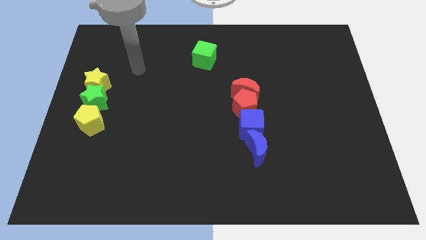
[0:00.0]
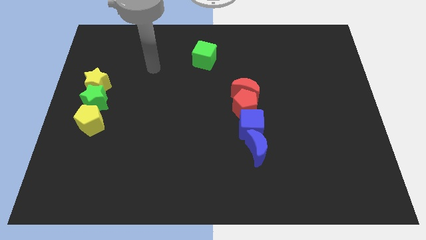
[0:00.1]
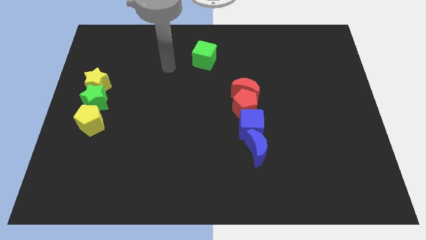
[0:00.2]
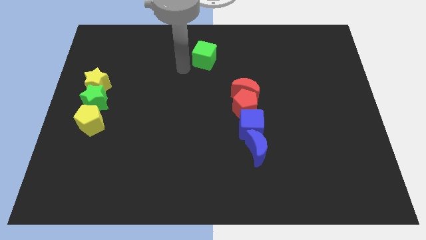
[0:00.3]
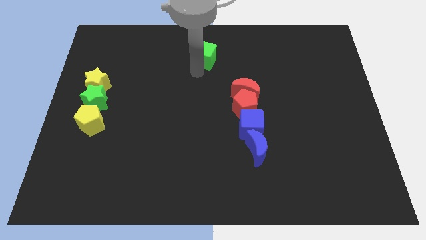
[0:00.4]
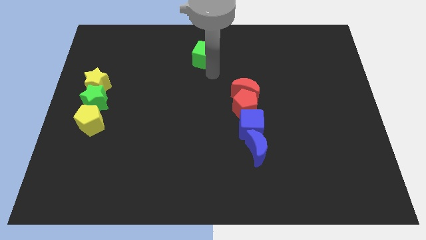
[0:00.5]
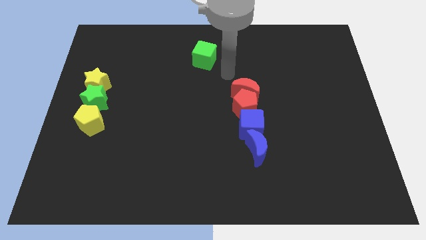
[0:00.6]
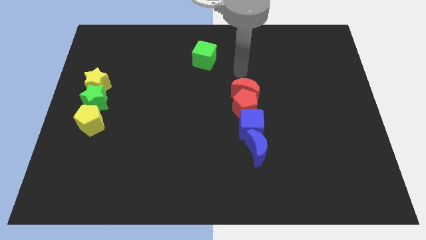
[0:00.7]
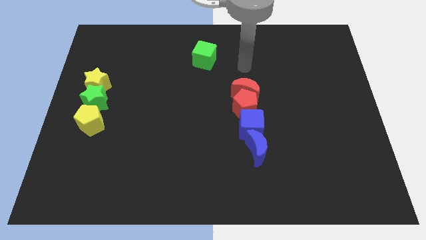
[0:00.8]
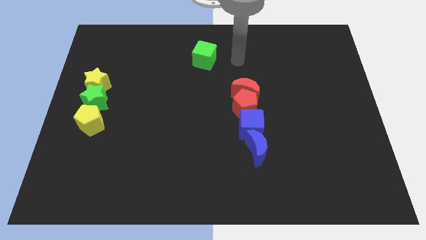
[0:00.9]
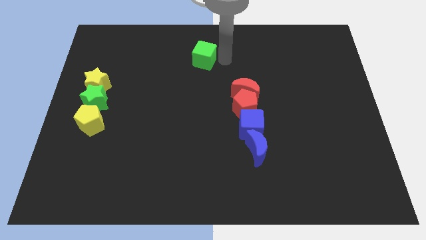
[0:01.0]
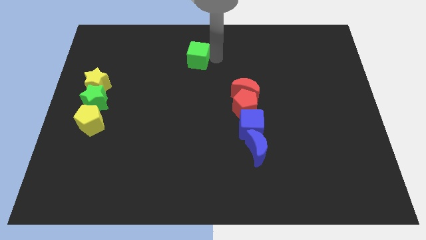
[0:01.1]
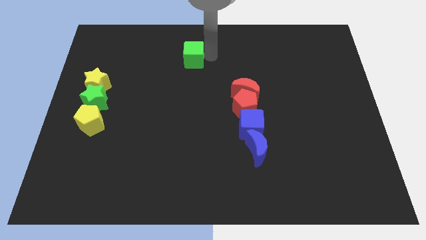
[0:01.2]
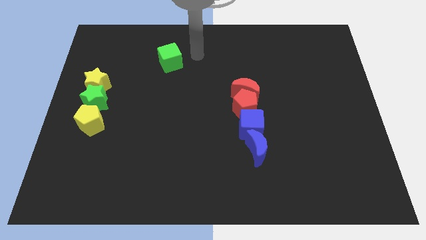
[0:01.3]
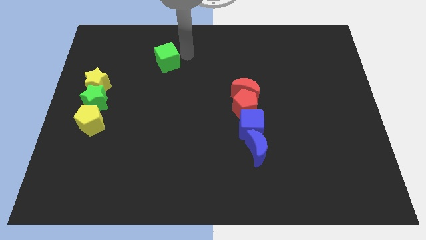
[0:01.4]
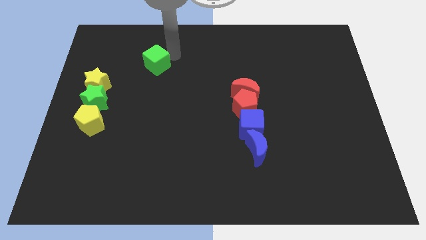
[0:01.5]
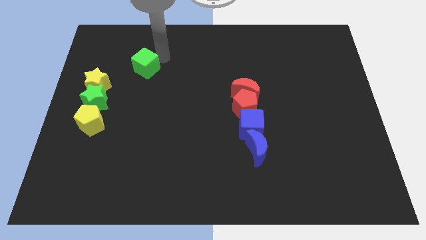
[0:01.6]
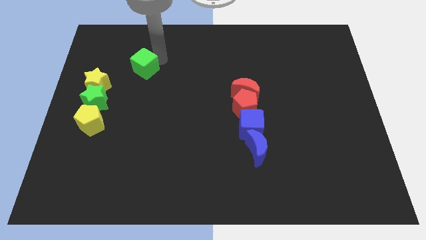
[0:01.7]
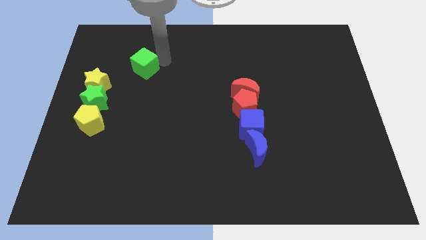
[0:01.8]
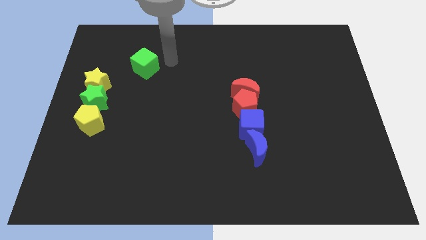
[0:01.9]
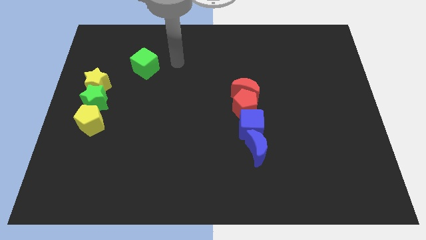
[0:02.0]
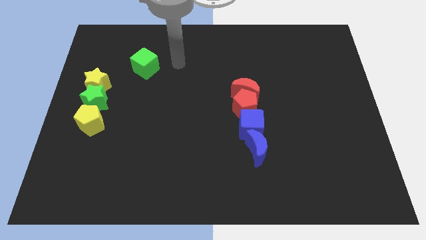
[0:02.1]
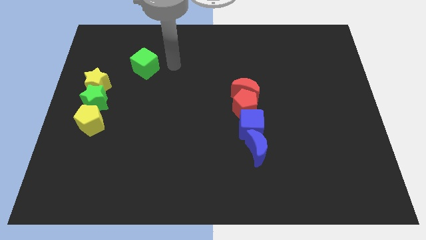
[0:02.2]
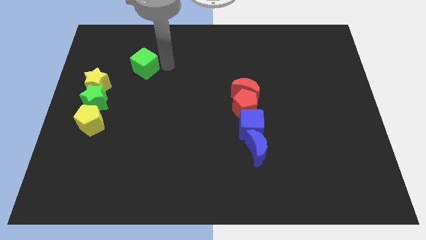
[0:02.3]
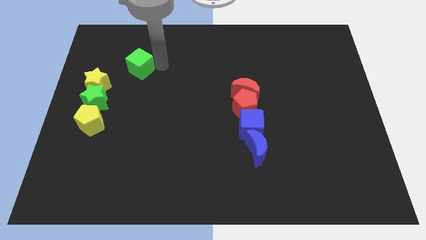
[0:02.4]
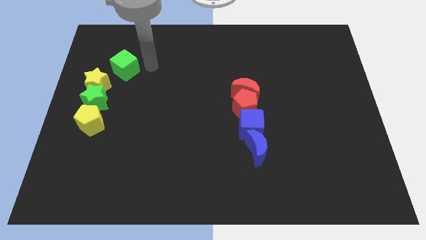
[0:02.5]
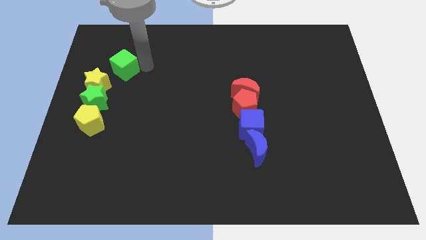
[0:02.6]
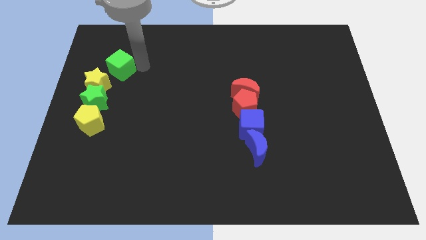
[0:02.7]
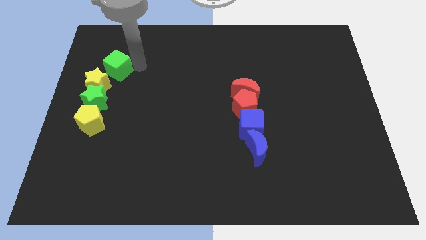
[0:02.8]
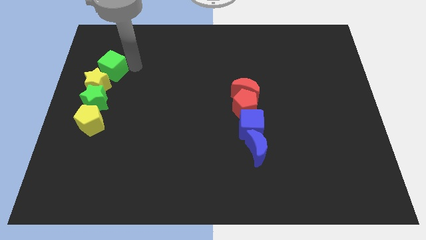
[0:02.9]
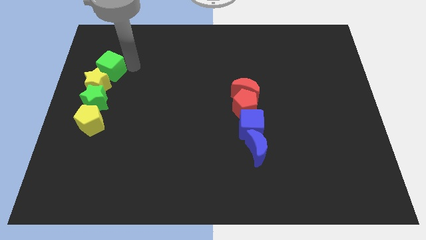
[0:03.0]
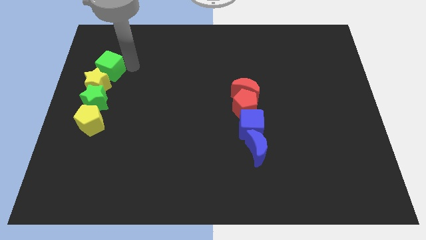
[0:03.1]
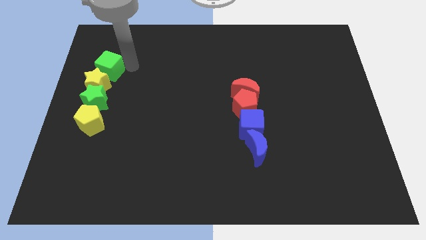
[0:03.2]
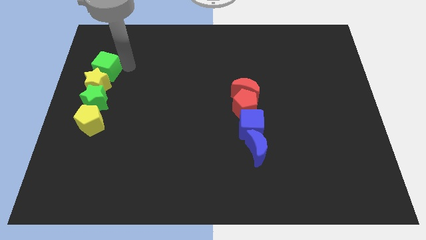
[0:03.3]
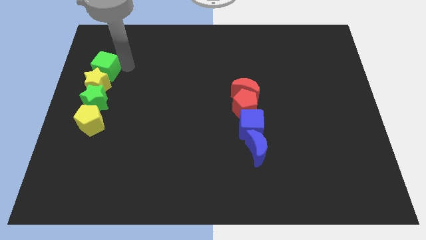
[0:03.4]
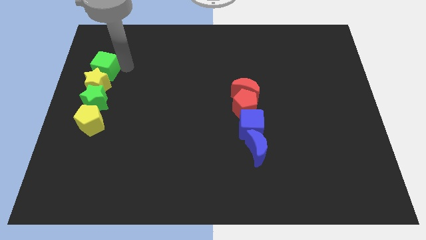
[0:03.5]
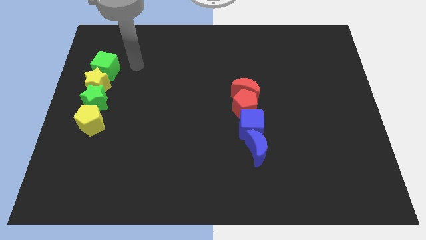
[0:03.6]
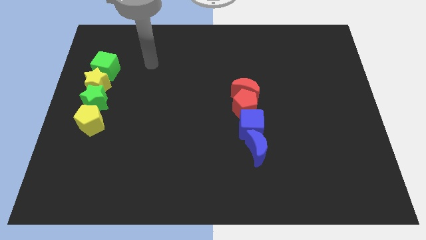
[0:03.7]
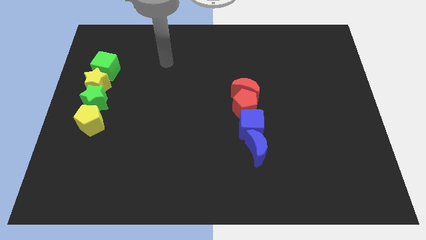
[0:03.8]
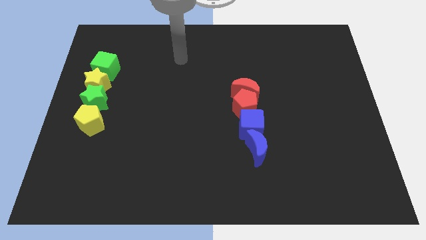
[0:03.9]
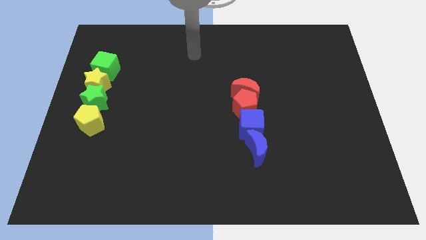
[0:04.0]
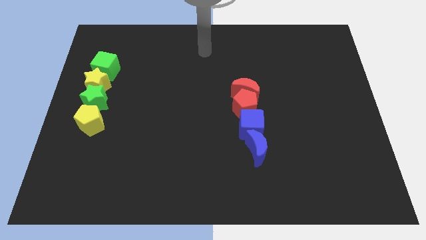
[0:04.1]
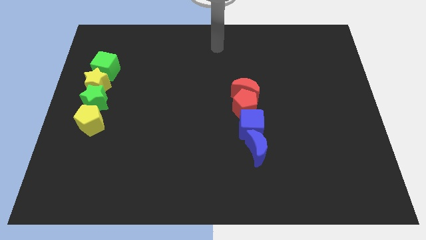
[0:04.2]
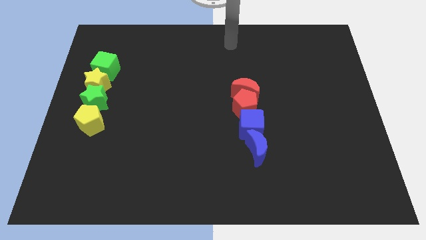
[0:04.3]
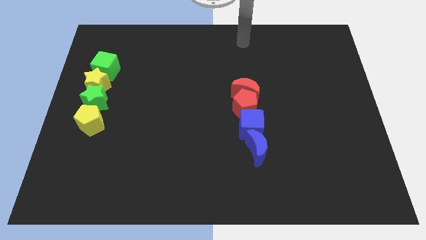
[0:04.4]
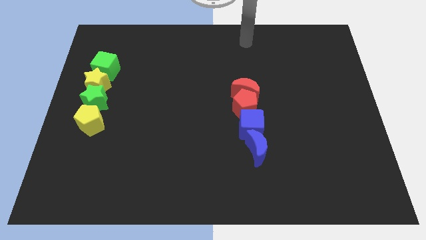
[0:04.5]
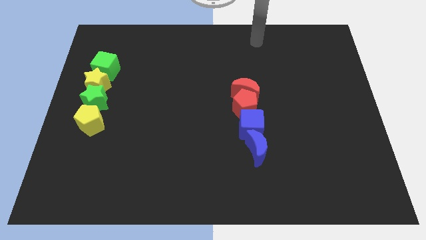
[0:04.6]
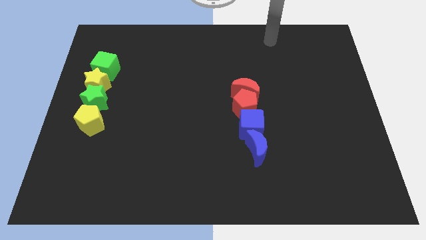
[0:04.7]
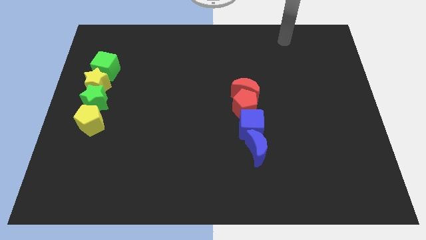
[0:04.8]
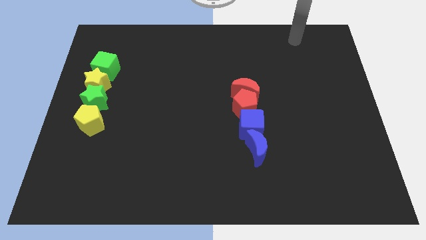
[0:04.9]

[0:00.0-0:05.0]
push the green cube above the yellow star

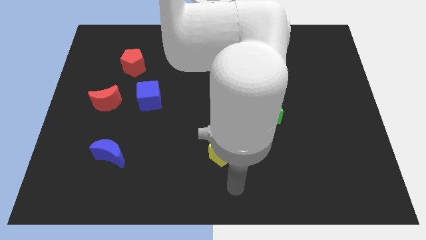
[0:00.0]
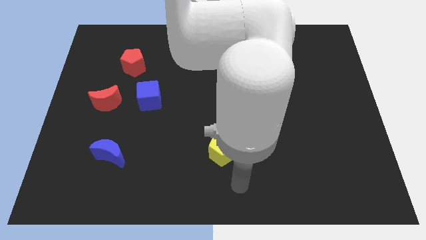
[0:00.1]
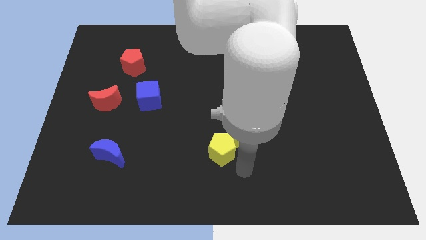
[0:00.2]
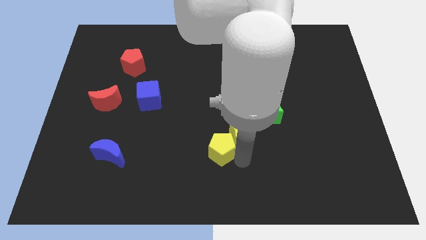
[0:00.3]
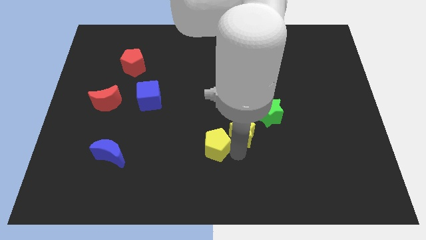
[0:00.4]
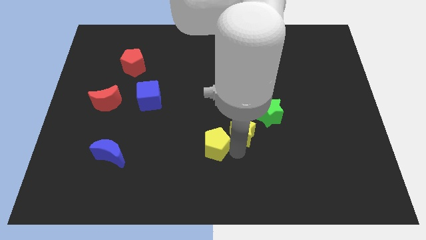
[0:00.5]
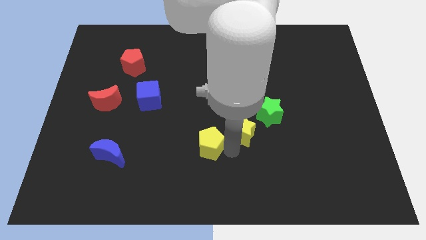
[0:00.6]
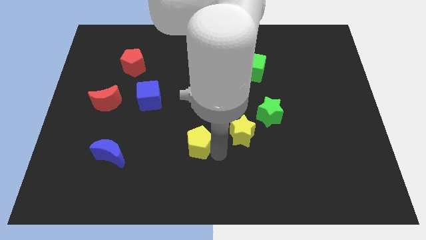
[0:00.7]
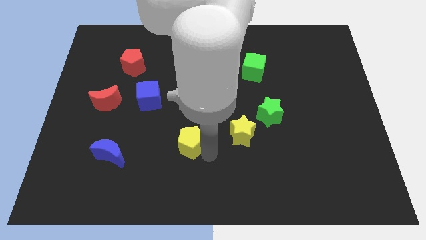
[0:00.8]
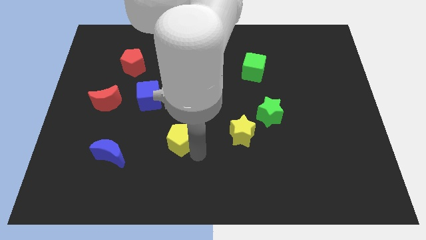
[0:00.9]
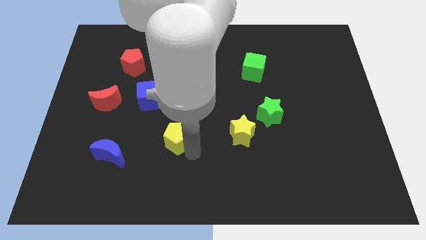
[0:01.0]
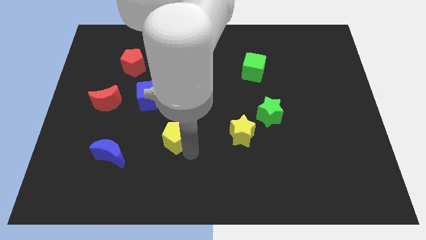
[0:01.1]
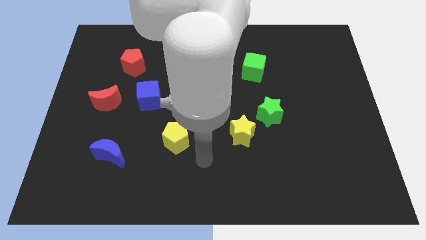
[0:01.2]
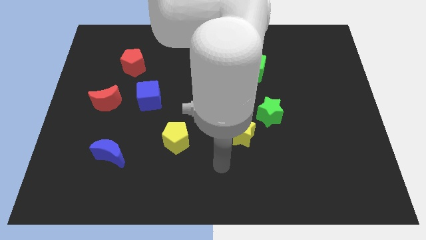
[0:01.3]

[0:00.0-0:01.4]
push the yellow pentagon to the bottom right of the blue cube

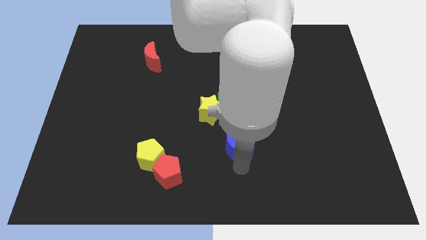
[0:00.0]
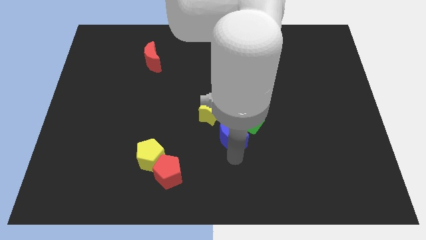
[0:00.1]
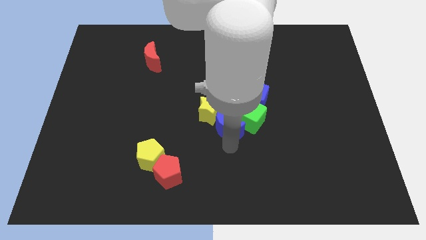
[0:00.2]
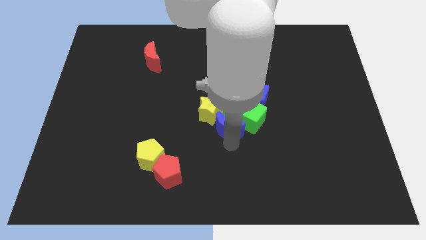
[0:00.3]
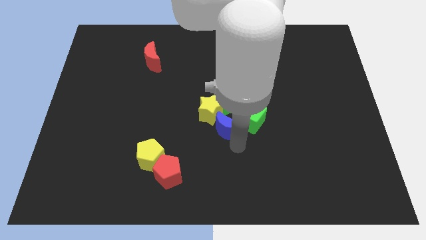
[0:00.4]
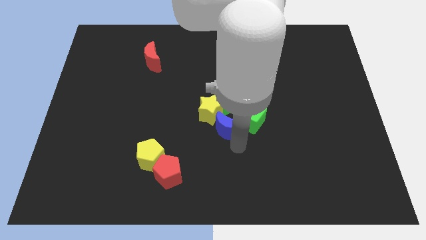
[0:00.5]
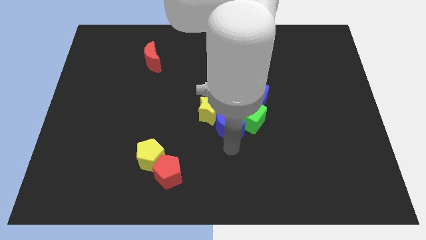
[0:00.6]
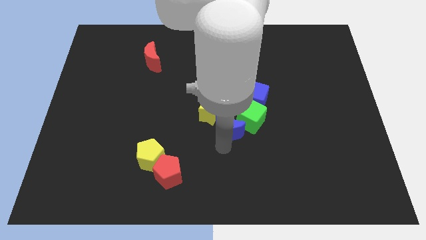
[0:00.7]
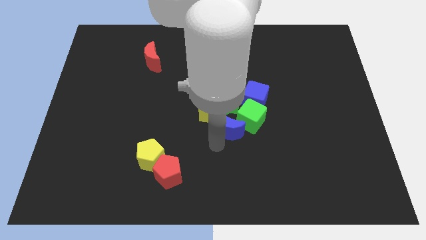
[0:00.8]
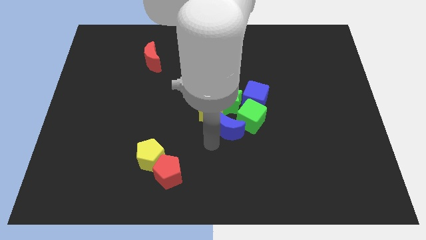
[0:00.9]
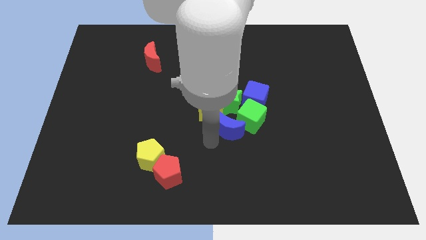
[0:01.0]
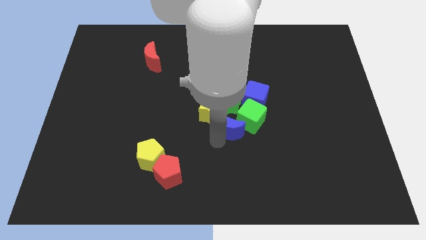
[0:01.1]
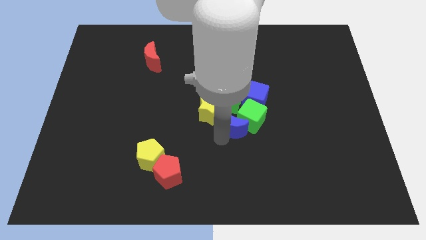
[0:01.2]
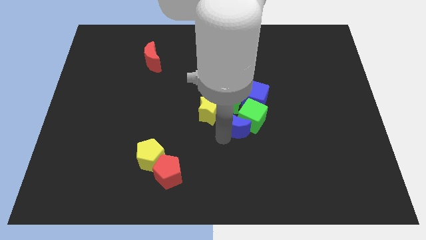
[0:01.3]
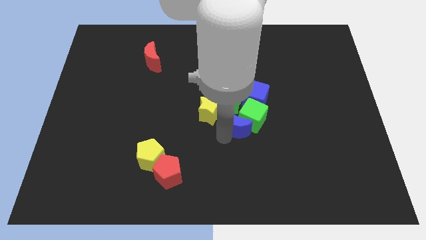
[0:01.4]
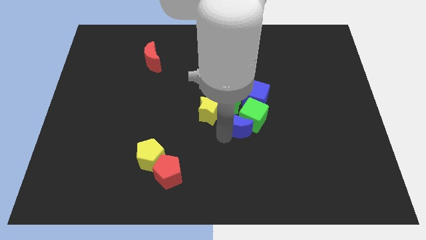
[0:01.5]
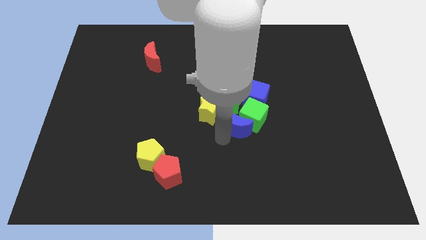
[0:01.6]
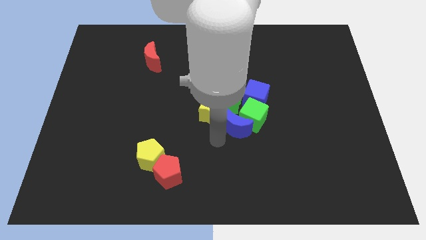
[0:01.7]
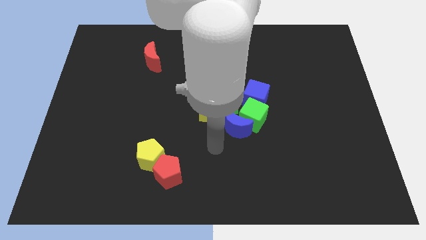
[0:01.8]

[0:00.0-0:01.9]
put the blue moon into the green cube

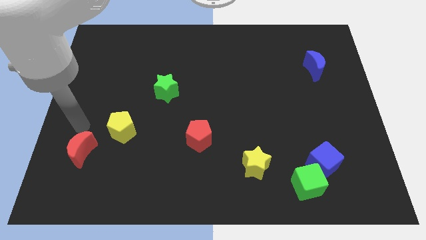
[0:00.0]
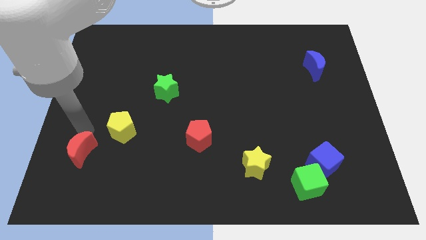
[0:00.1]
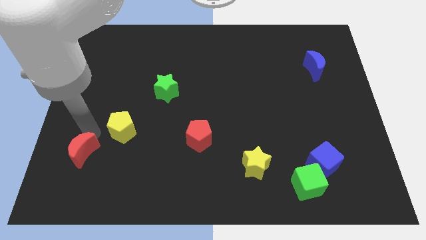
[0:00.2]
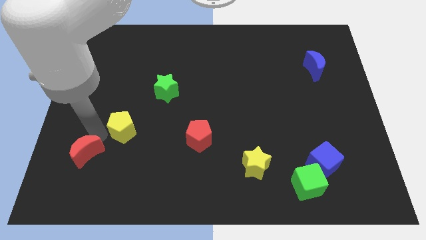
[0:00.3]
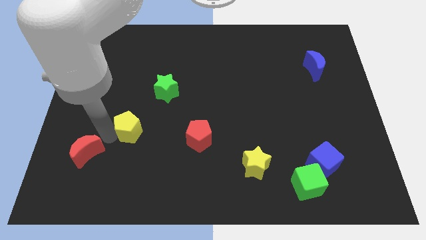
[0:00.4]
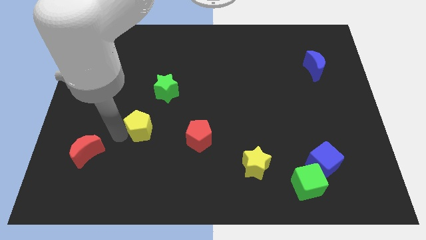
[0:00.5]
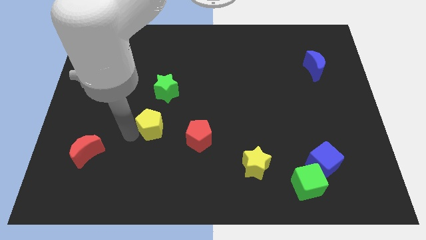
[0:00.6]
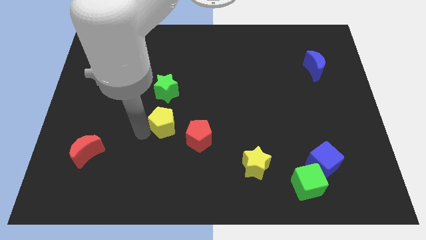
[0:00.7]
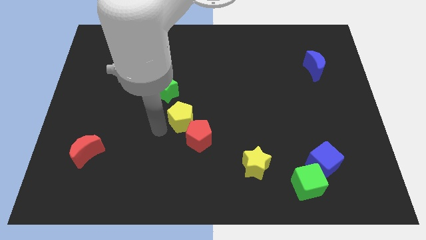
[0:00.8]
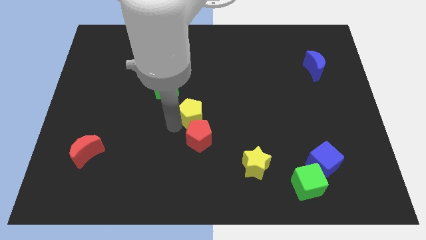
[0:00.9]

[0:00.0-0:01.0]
push the yellow pentagon above the red pentagon
